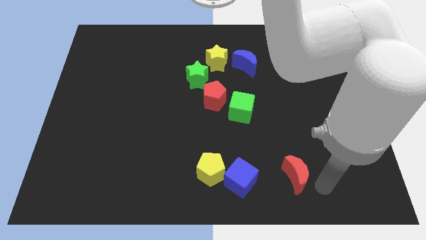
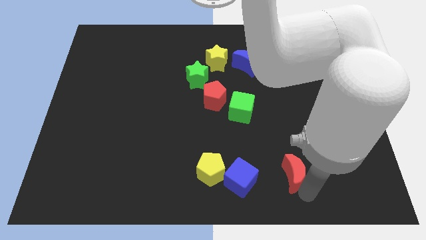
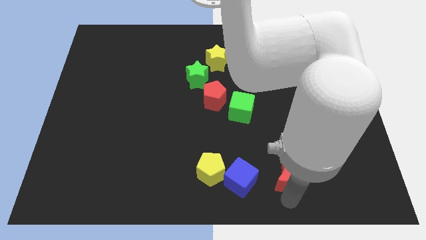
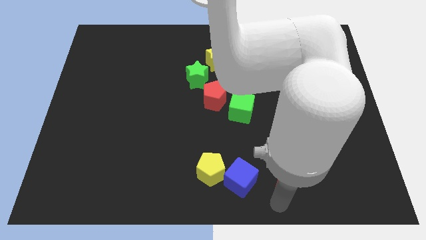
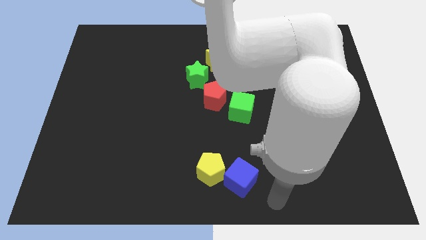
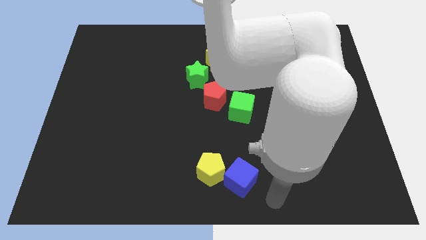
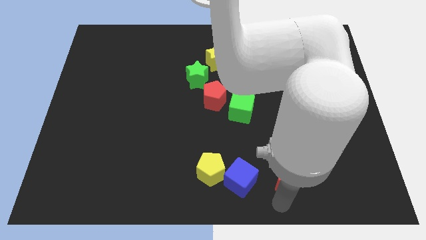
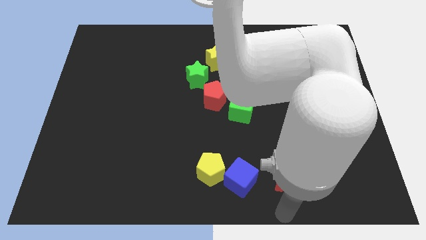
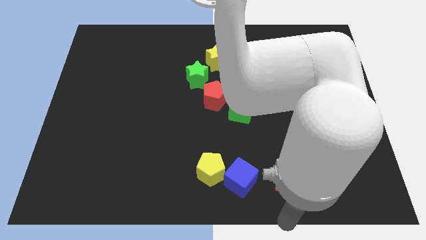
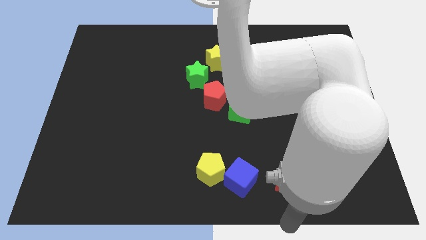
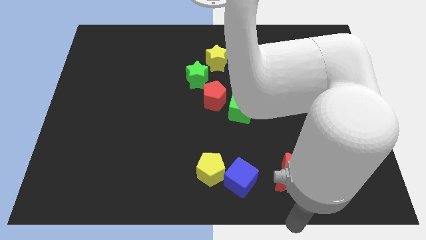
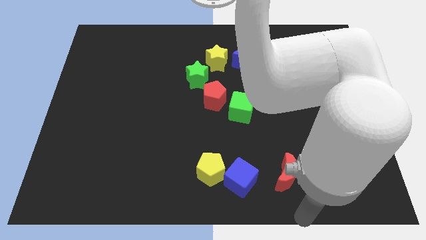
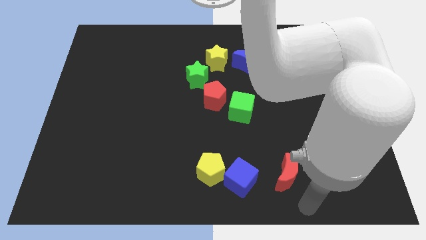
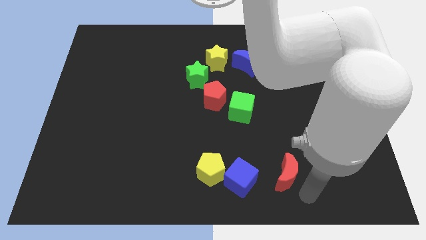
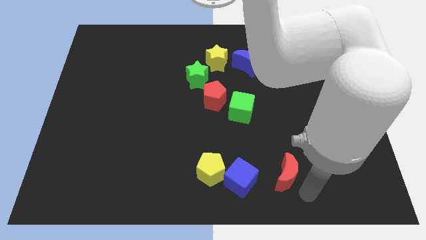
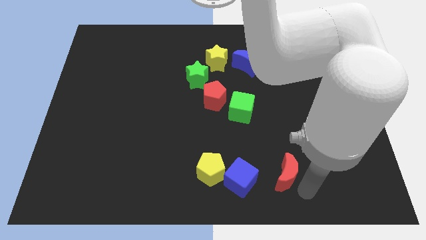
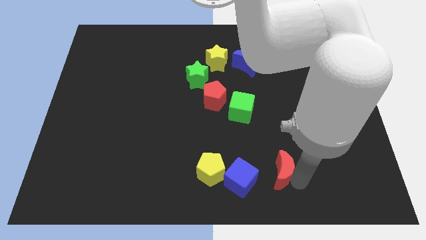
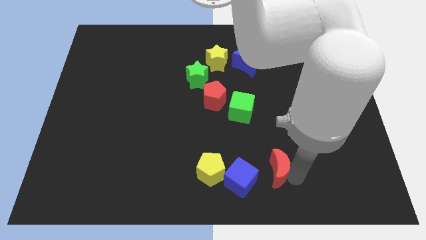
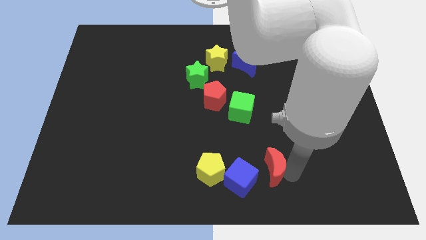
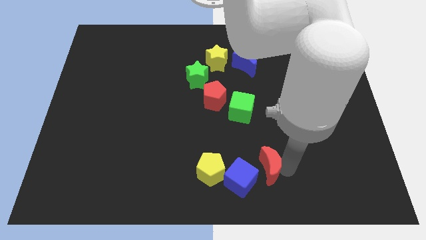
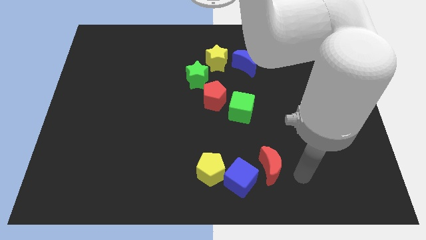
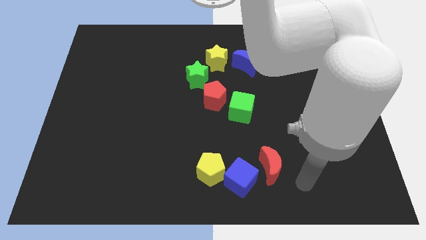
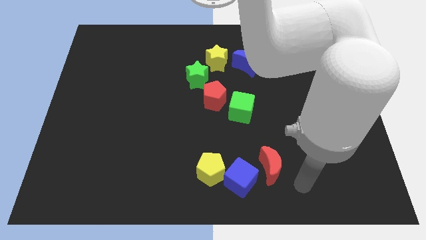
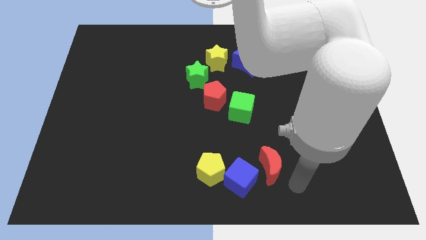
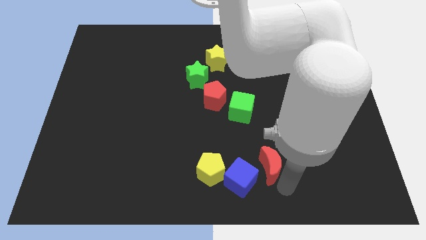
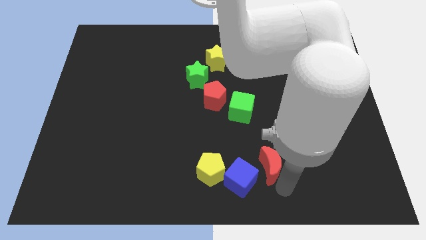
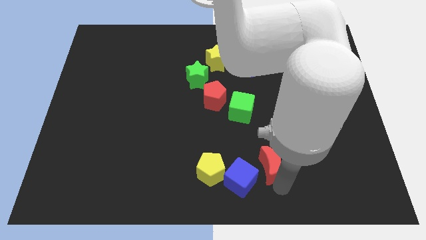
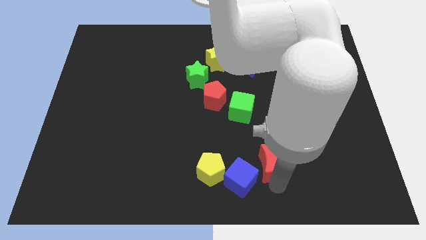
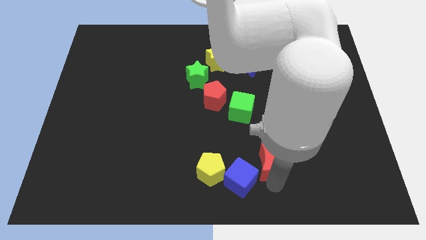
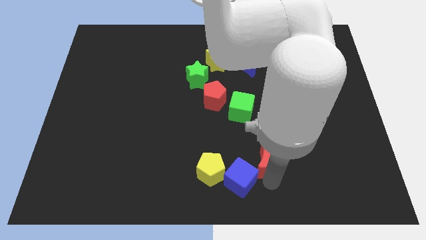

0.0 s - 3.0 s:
push red moon beside blue cube

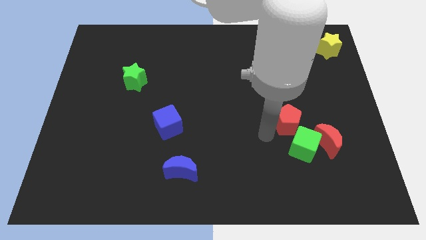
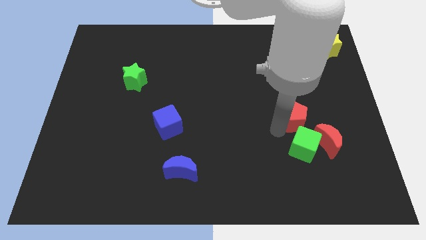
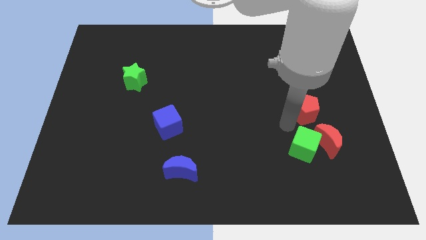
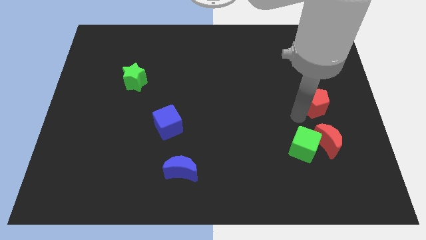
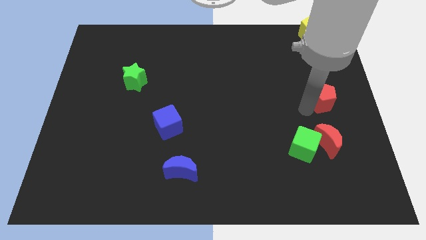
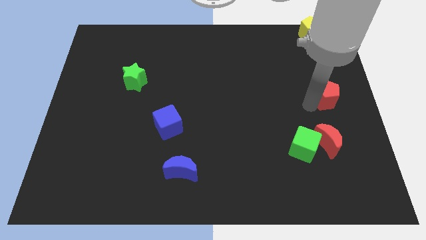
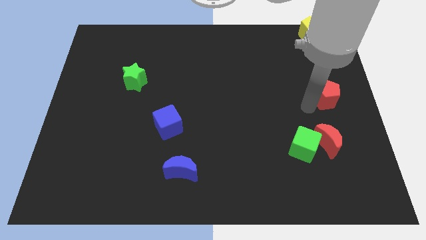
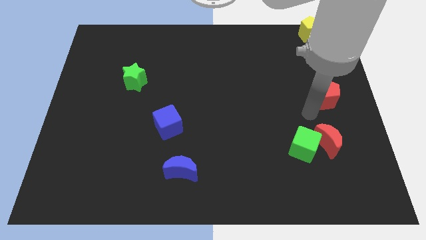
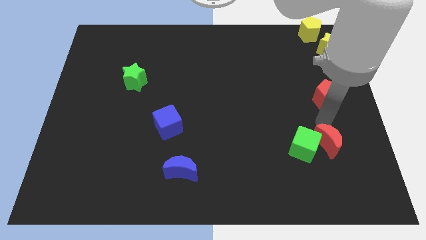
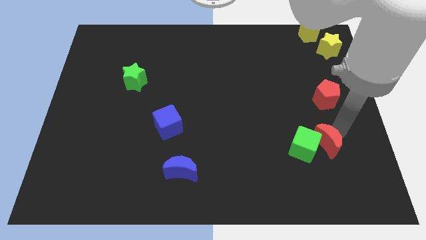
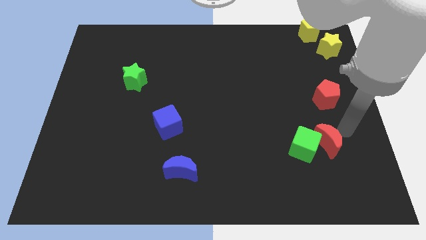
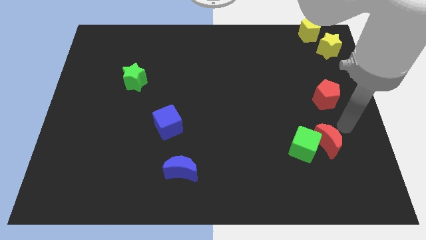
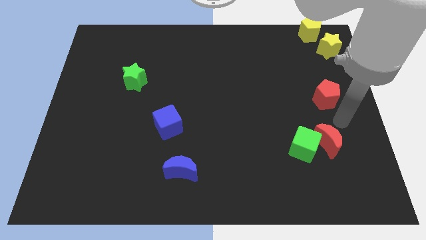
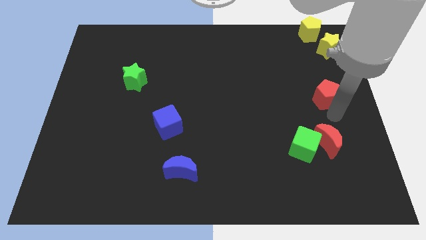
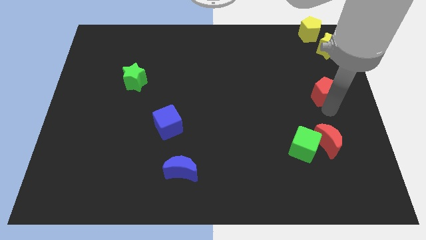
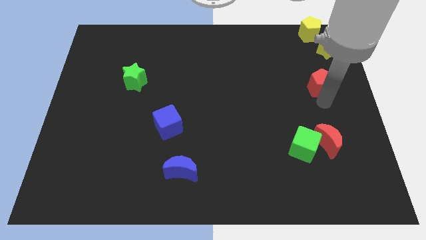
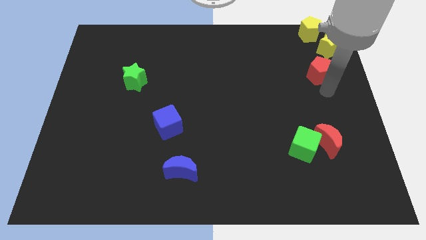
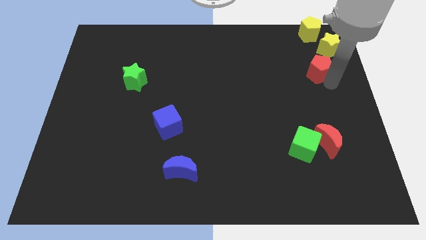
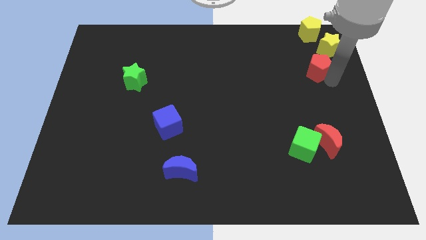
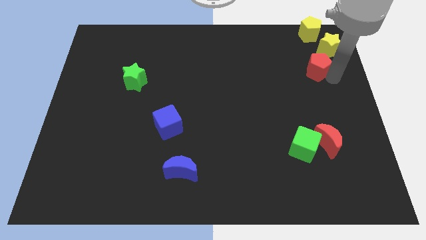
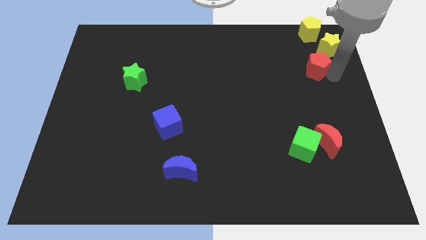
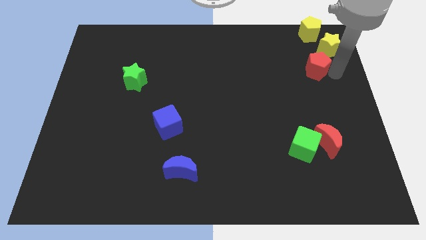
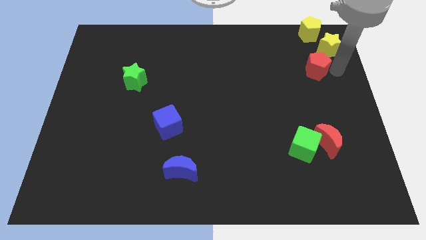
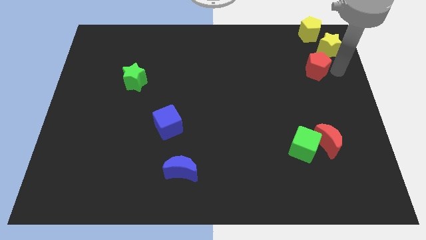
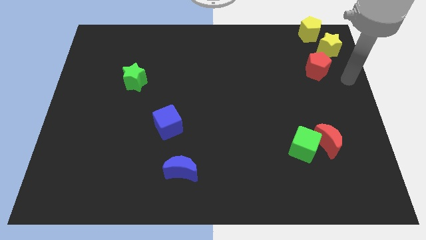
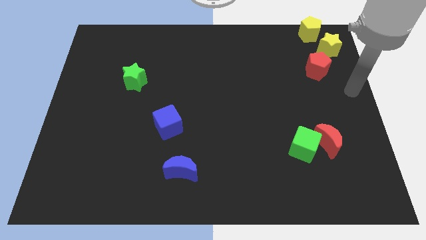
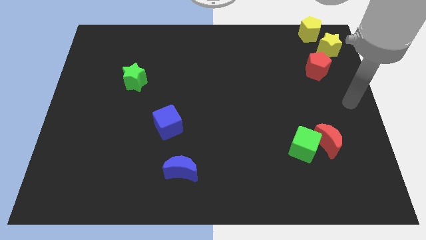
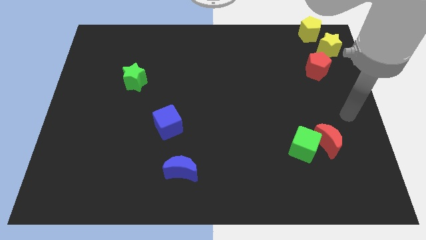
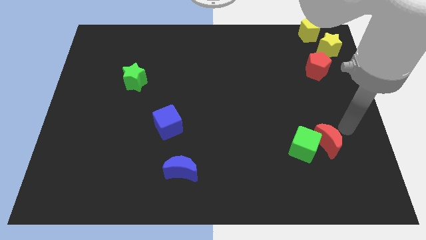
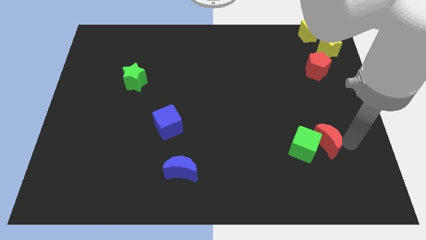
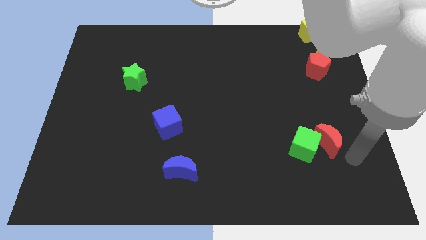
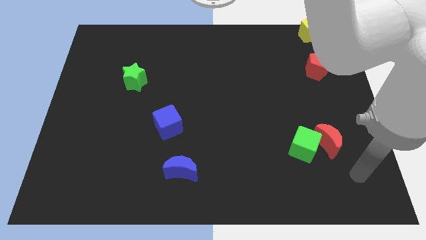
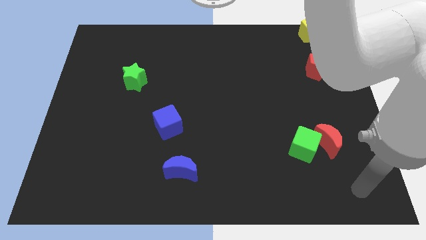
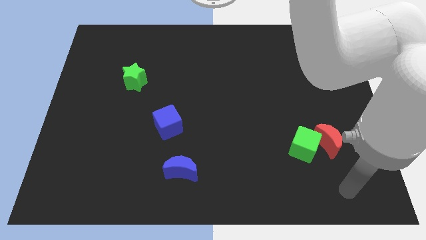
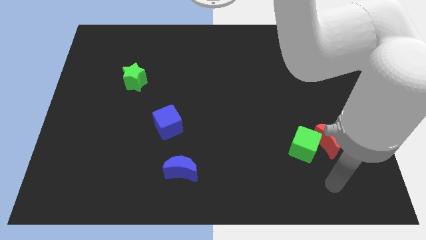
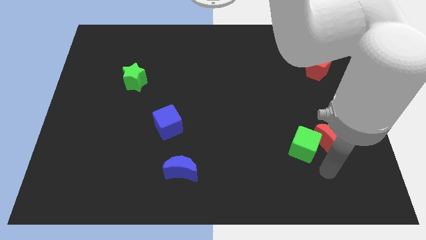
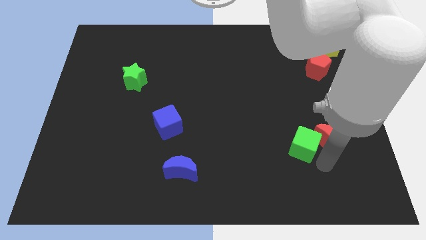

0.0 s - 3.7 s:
move the red pentagon to the top right corner

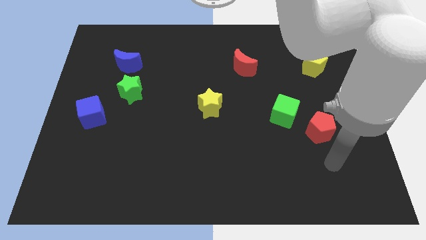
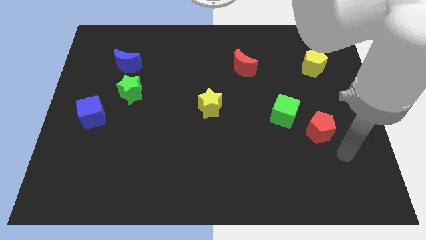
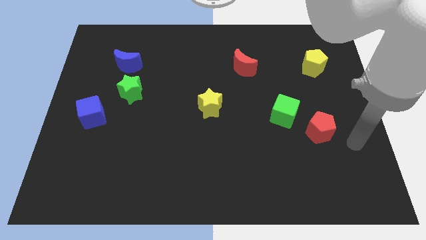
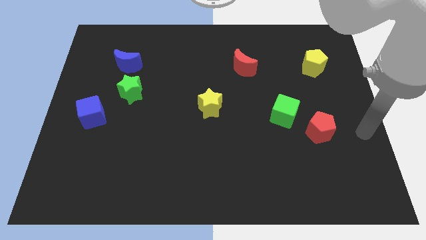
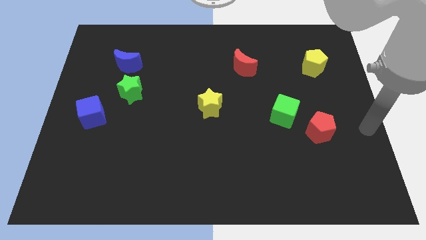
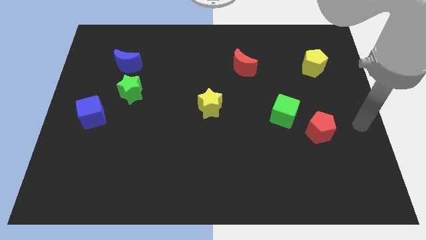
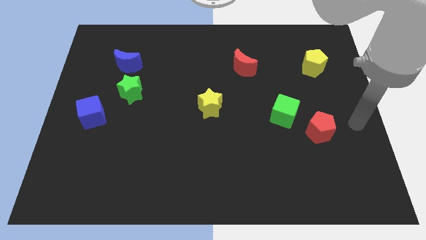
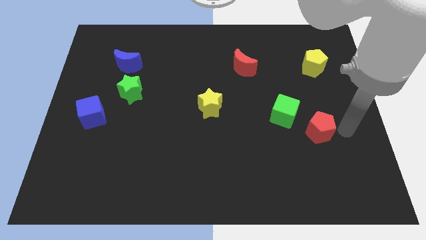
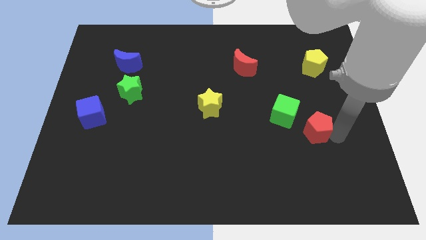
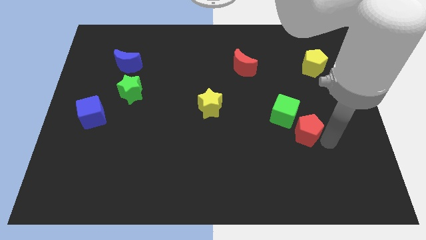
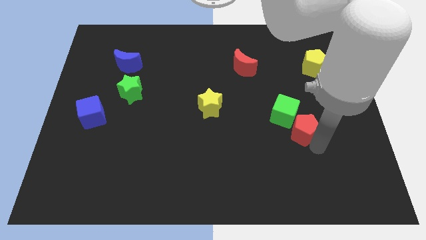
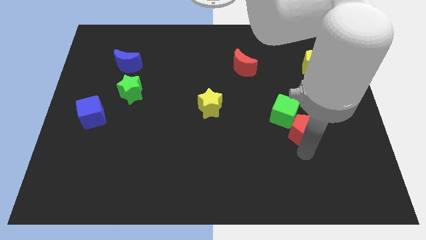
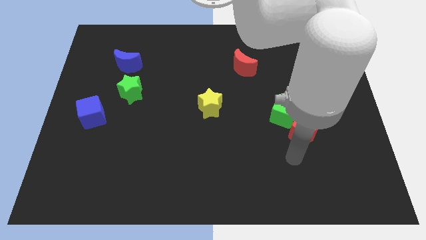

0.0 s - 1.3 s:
move the red pentagon close to the green cube

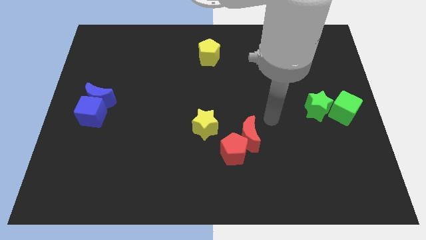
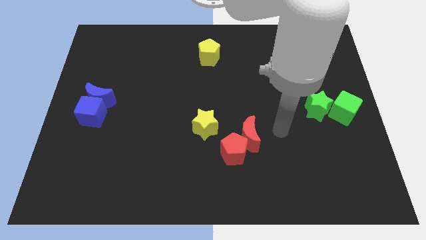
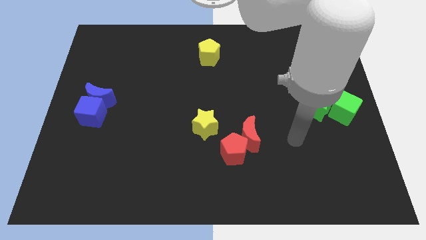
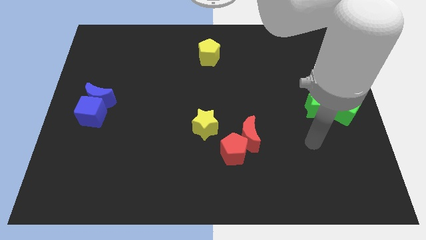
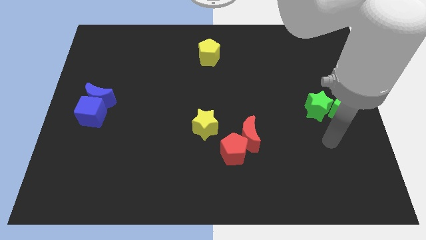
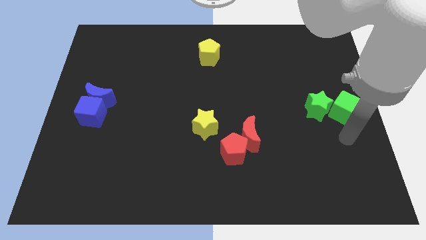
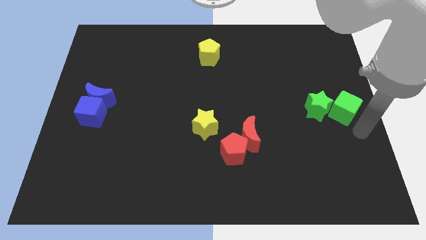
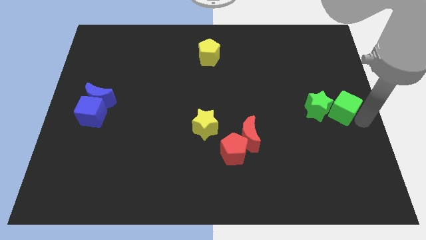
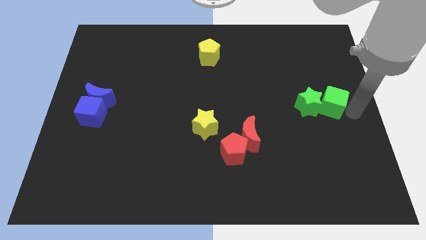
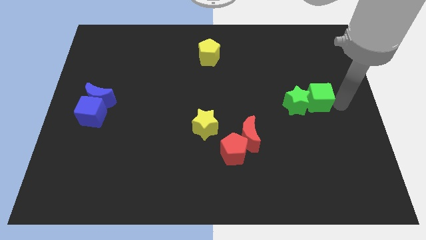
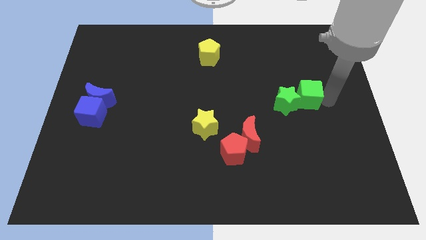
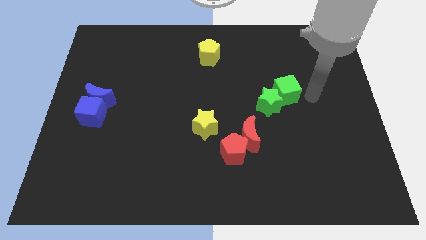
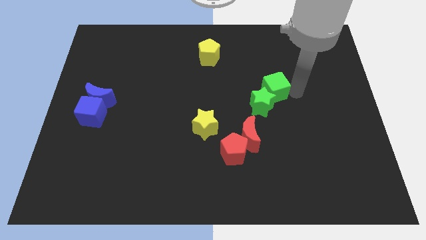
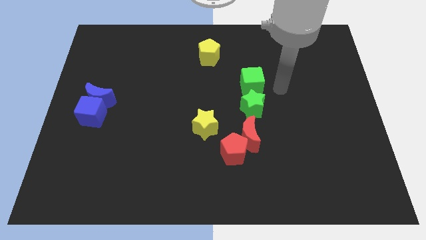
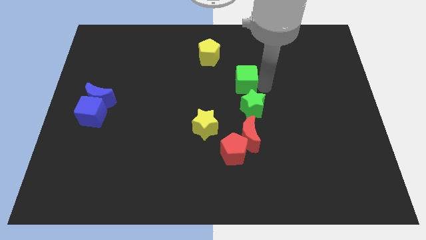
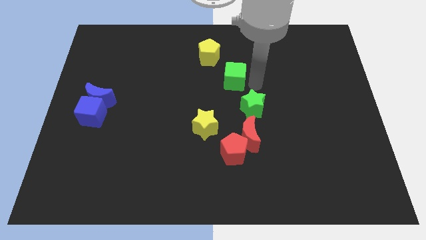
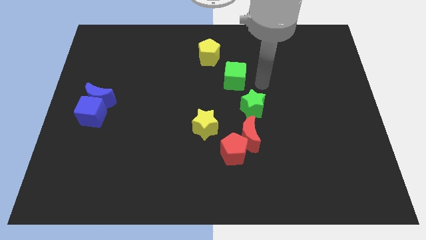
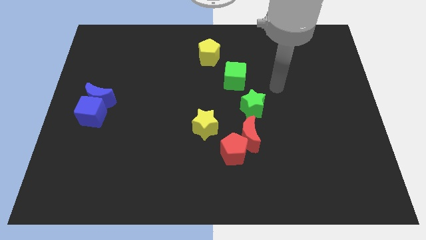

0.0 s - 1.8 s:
separate the green cube and green star
